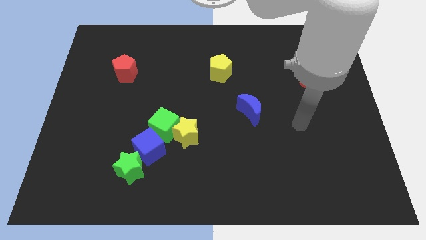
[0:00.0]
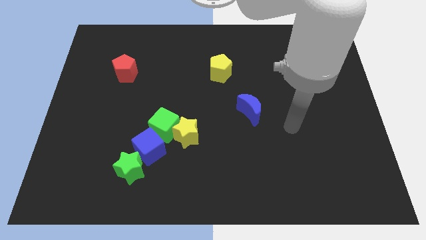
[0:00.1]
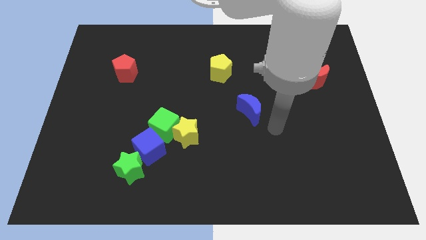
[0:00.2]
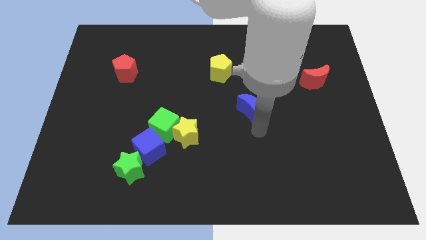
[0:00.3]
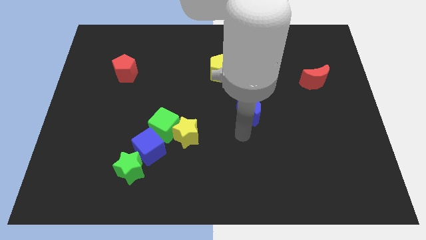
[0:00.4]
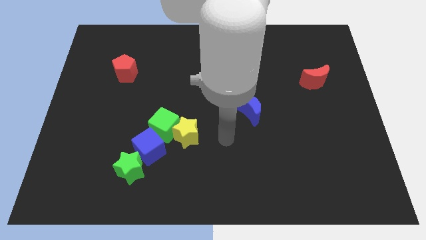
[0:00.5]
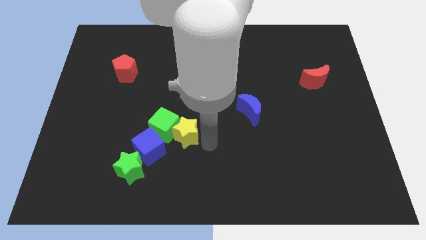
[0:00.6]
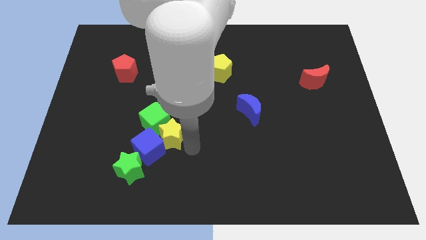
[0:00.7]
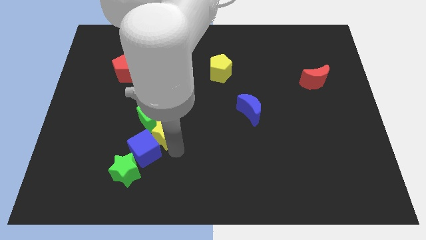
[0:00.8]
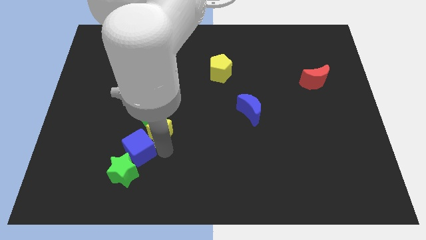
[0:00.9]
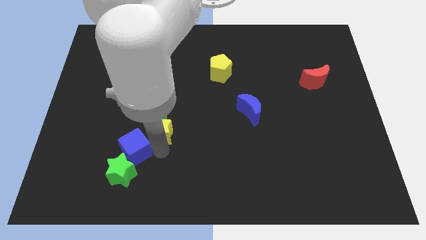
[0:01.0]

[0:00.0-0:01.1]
place your arm to the bottom of yellow star

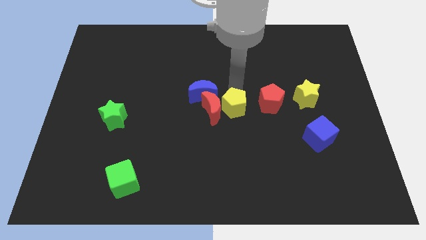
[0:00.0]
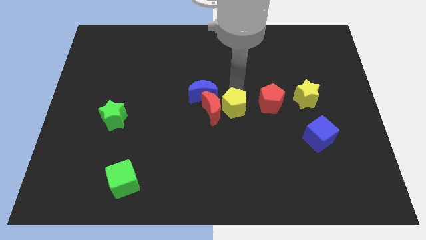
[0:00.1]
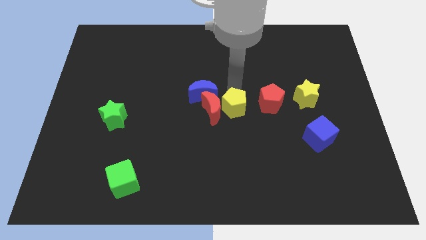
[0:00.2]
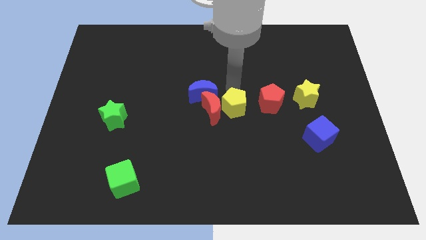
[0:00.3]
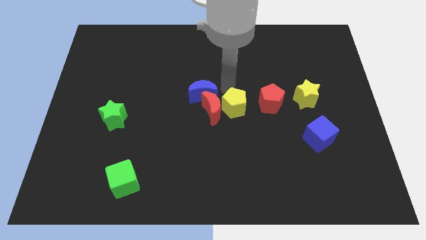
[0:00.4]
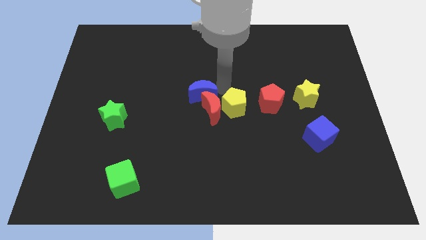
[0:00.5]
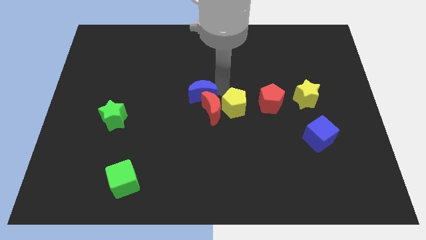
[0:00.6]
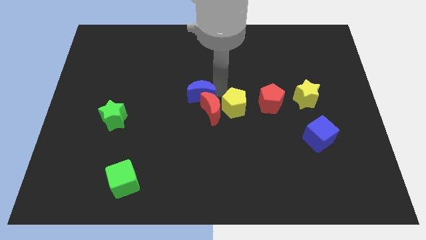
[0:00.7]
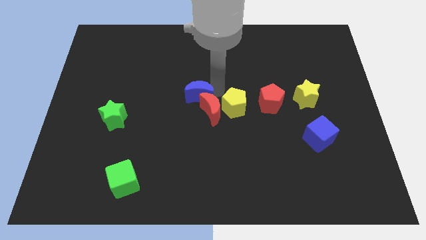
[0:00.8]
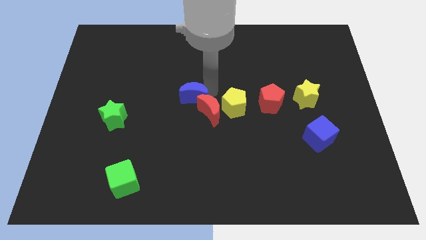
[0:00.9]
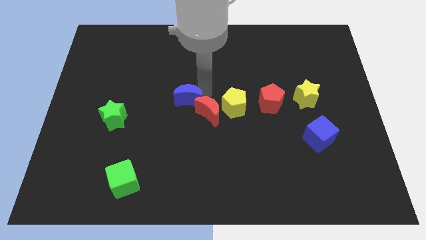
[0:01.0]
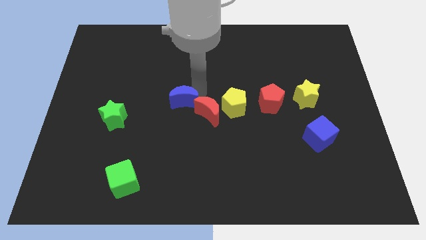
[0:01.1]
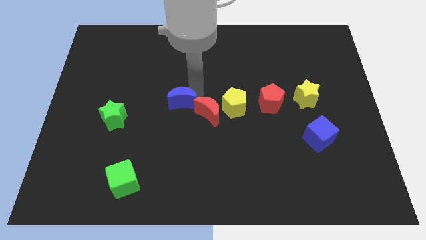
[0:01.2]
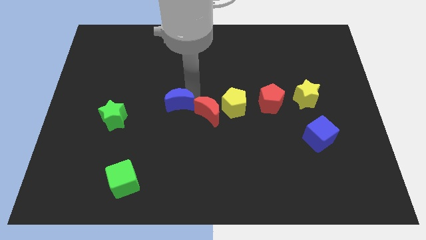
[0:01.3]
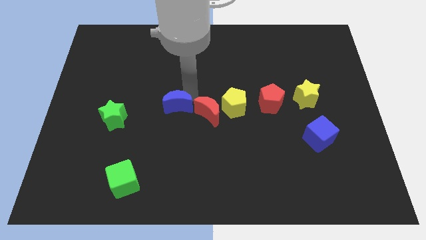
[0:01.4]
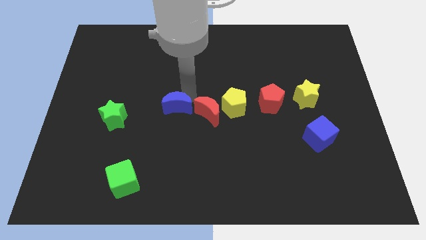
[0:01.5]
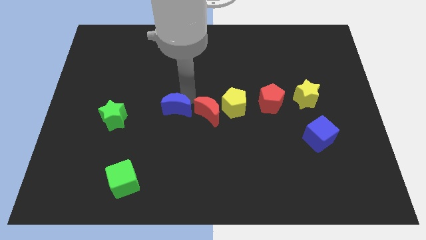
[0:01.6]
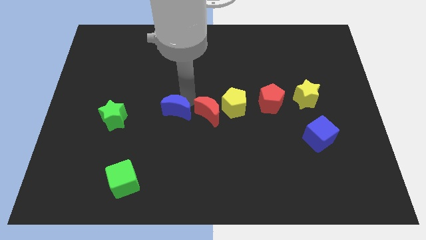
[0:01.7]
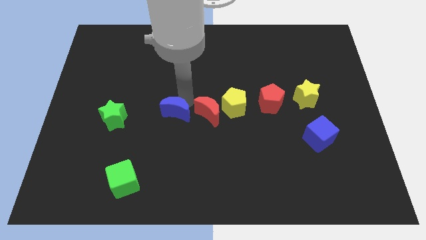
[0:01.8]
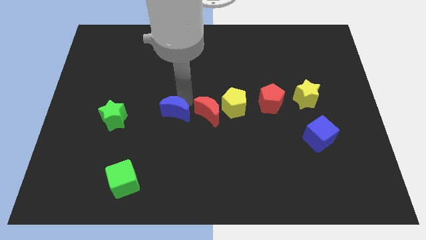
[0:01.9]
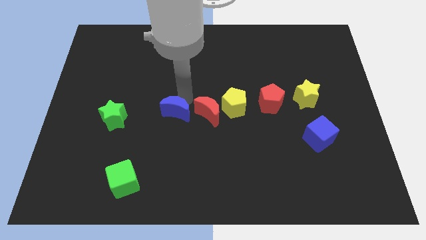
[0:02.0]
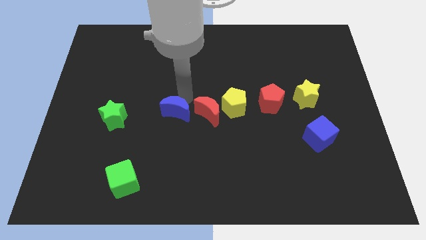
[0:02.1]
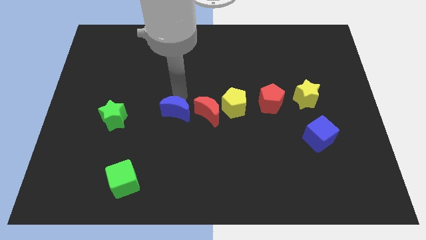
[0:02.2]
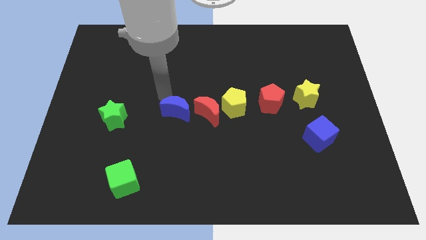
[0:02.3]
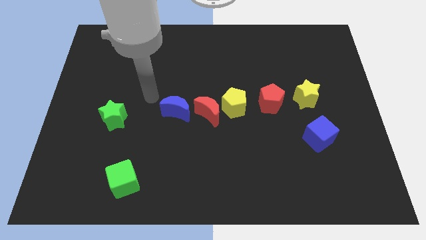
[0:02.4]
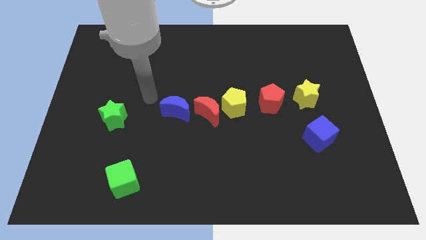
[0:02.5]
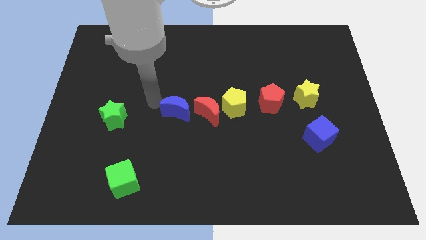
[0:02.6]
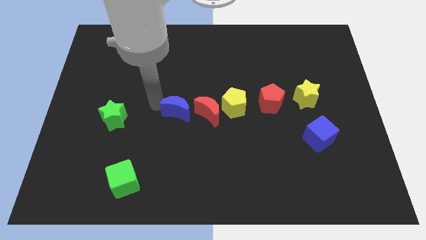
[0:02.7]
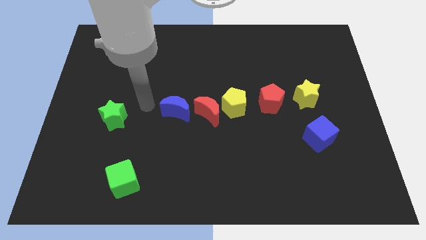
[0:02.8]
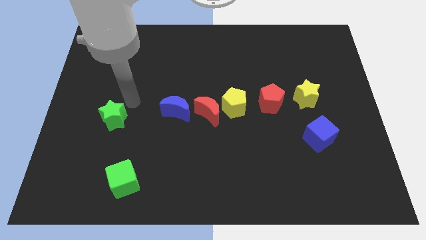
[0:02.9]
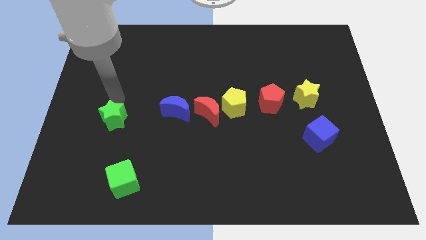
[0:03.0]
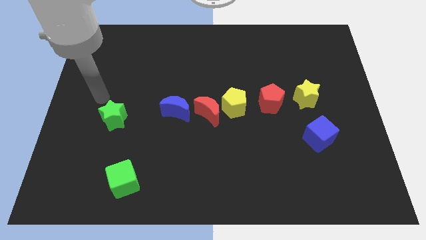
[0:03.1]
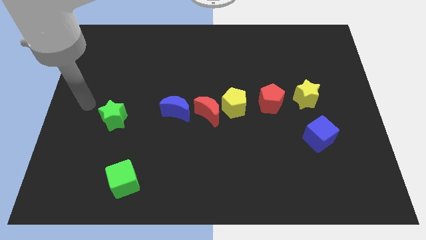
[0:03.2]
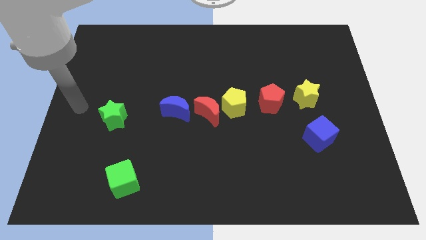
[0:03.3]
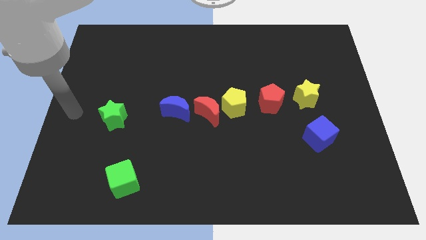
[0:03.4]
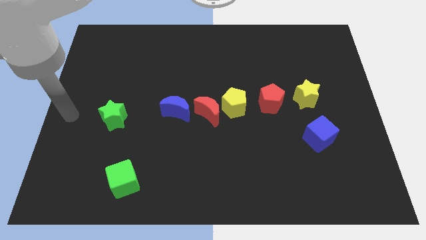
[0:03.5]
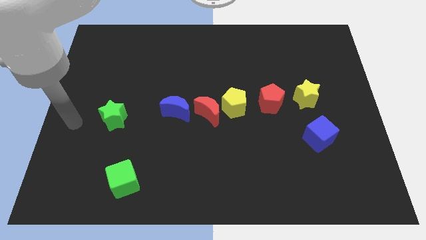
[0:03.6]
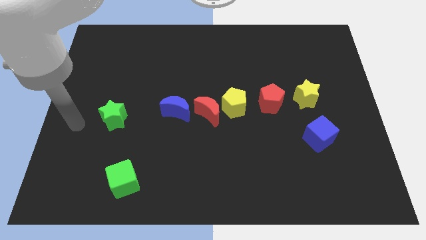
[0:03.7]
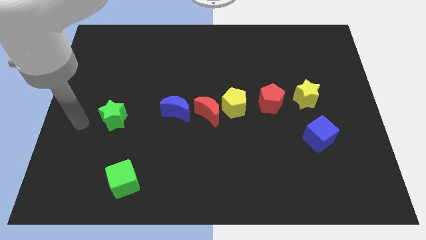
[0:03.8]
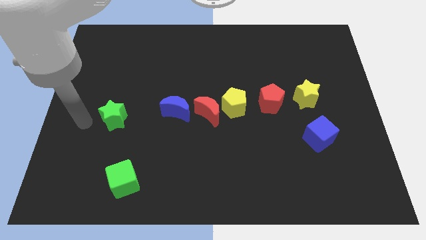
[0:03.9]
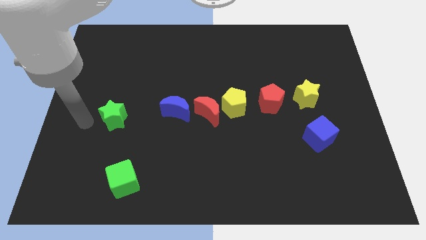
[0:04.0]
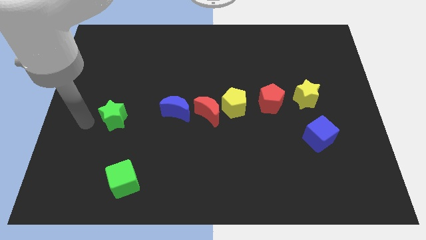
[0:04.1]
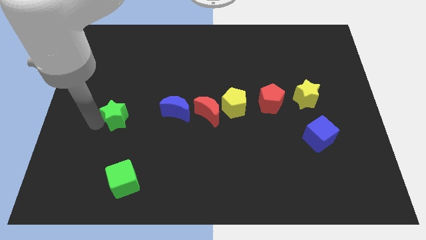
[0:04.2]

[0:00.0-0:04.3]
place the arm left to the green star

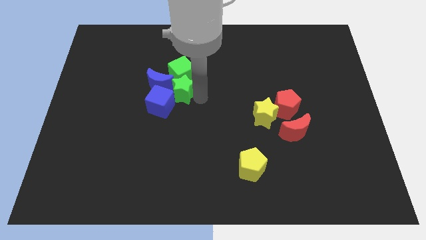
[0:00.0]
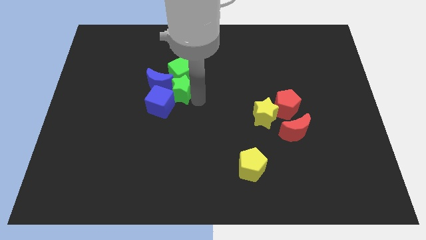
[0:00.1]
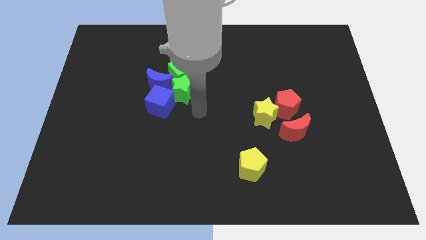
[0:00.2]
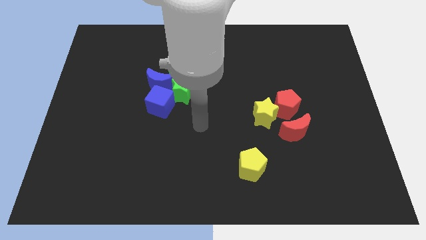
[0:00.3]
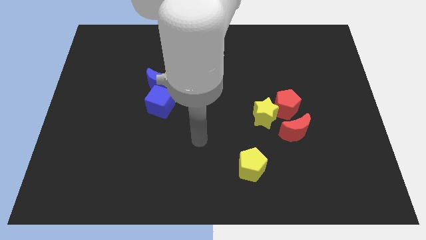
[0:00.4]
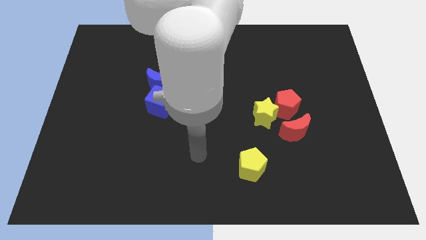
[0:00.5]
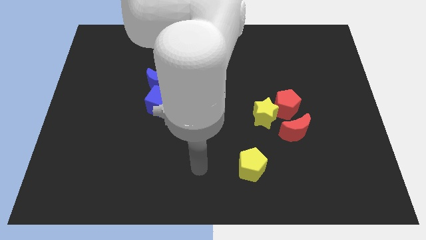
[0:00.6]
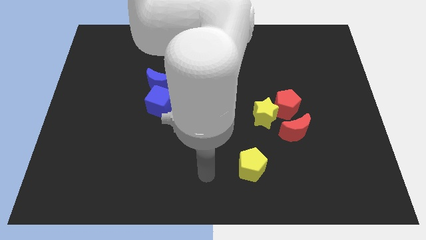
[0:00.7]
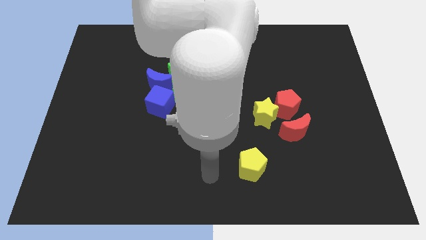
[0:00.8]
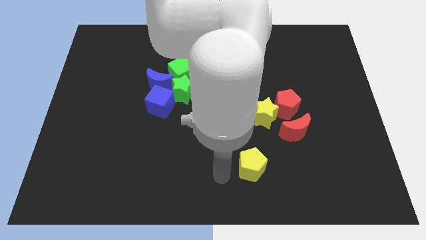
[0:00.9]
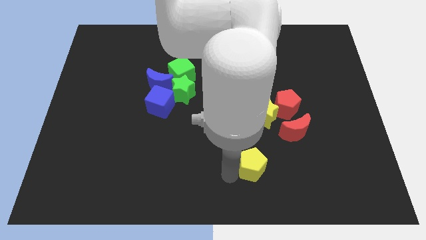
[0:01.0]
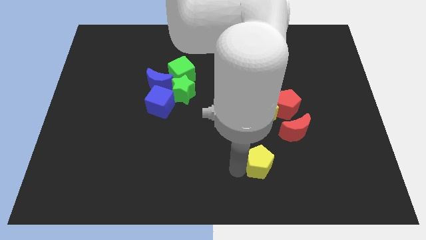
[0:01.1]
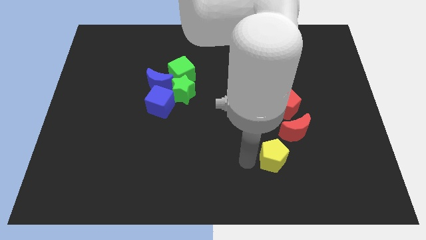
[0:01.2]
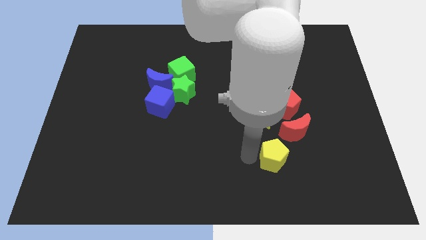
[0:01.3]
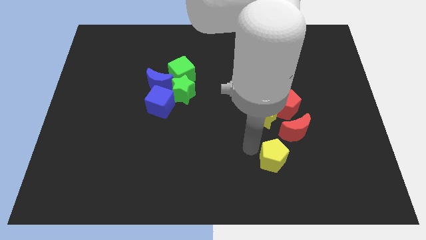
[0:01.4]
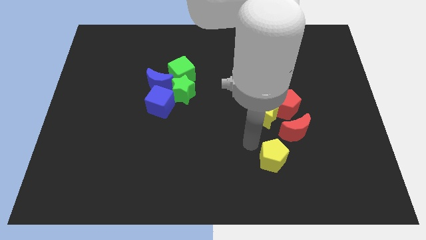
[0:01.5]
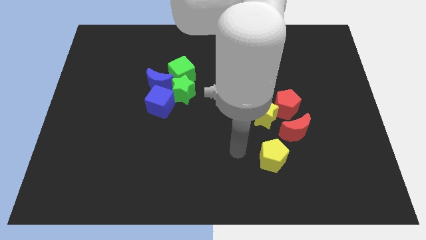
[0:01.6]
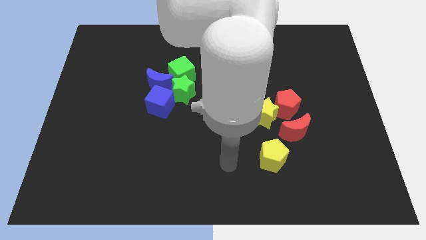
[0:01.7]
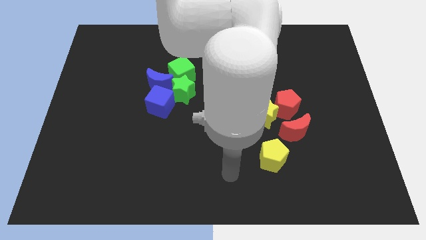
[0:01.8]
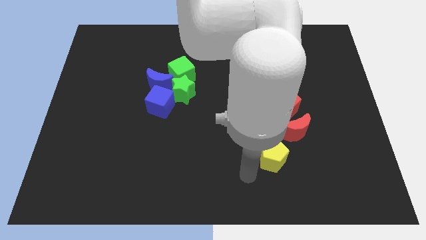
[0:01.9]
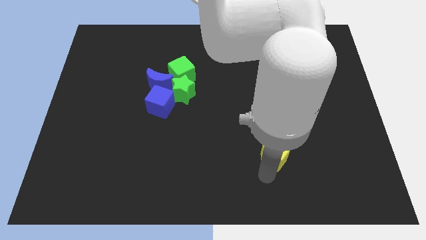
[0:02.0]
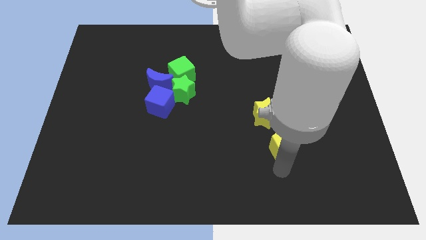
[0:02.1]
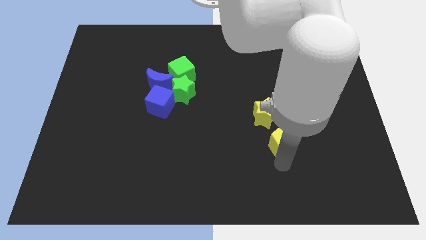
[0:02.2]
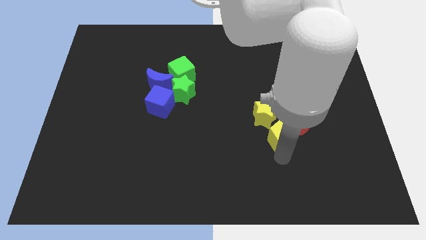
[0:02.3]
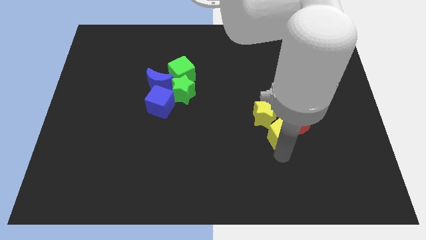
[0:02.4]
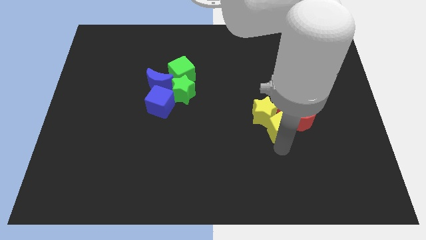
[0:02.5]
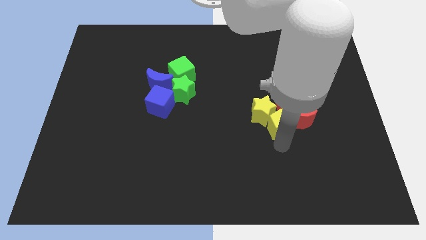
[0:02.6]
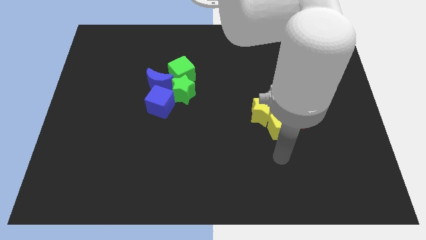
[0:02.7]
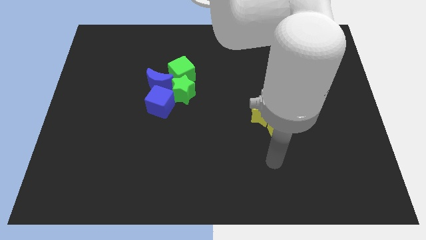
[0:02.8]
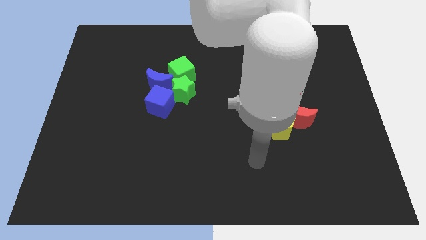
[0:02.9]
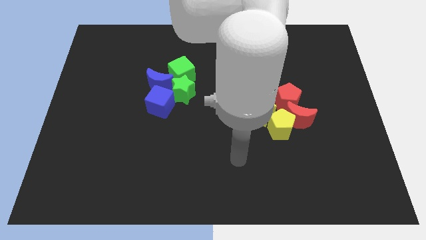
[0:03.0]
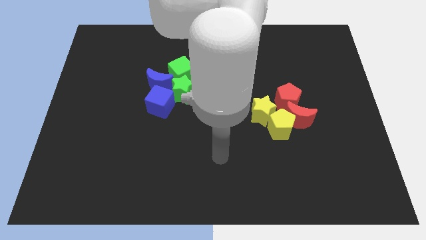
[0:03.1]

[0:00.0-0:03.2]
move yellow pentagon to the bottom right of yellow star

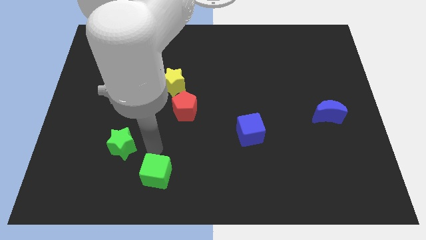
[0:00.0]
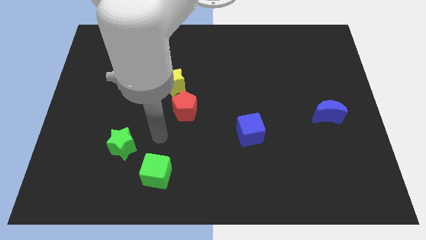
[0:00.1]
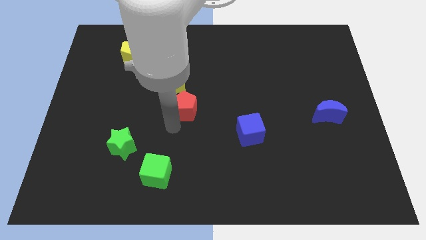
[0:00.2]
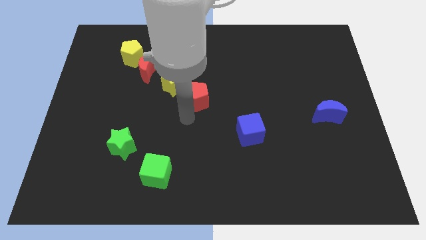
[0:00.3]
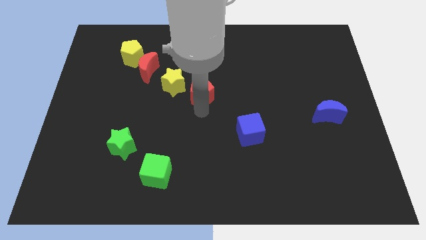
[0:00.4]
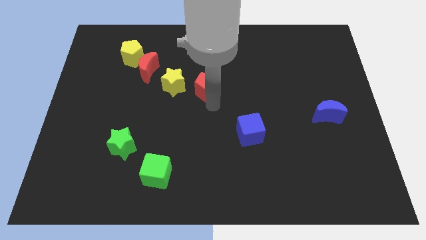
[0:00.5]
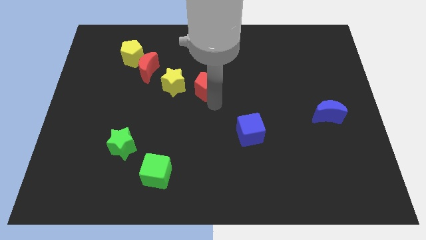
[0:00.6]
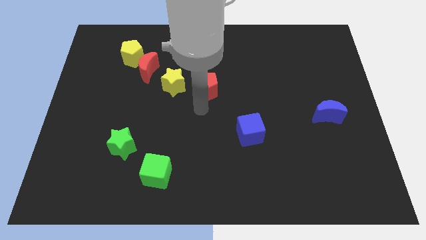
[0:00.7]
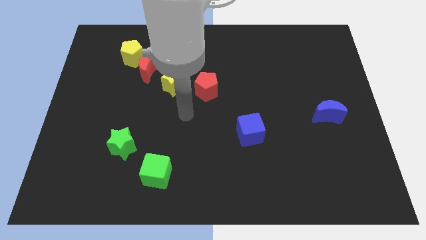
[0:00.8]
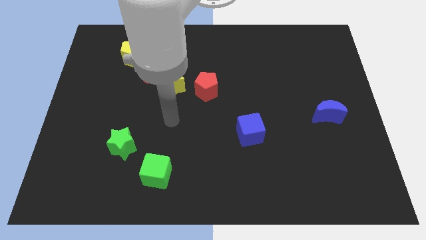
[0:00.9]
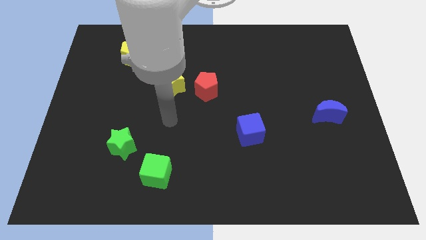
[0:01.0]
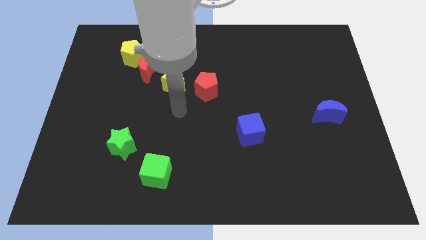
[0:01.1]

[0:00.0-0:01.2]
push the red pentagon to the right of the yellow star
